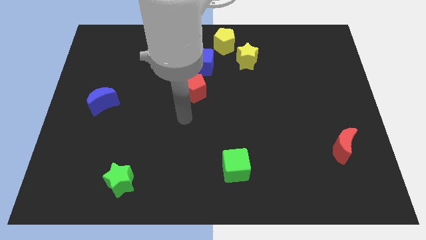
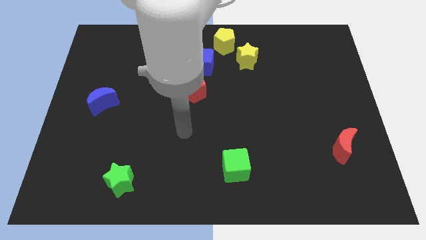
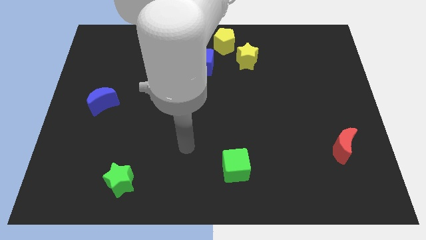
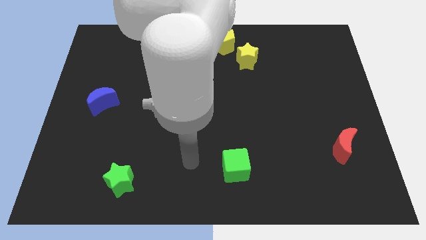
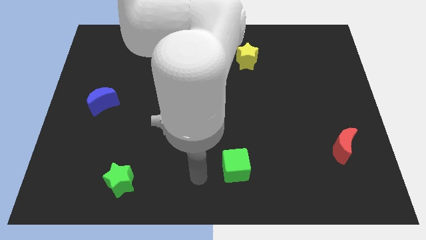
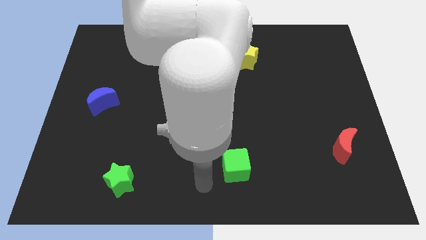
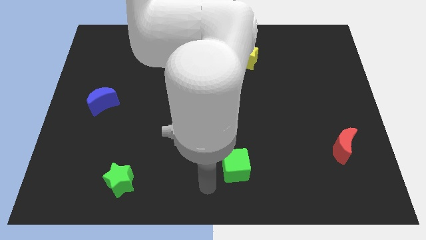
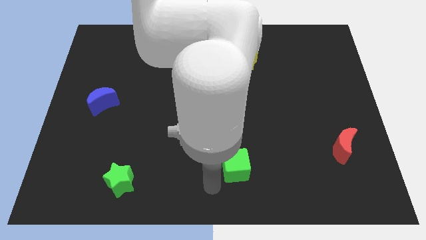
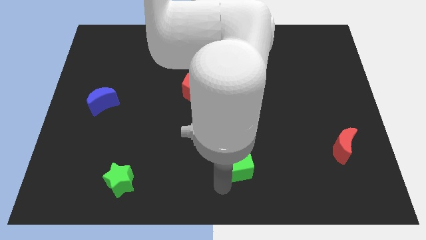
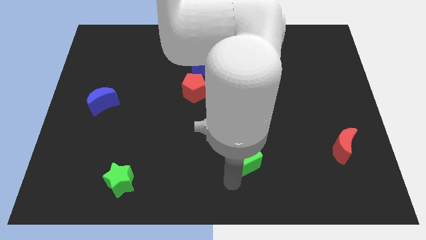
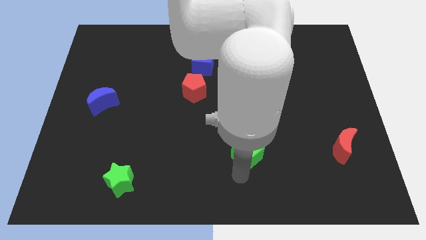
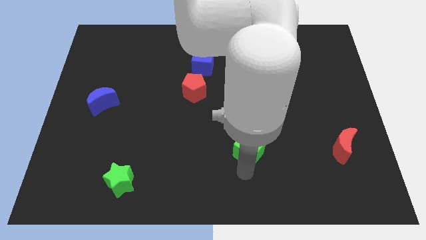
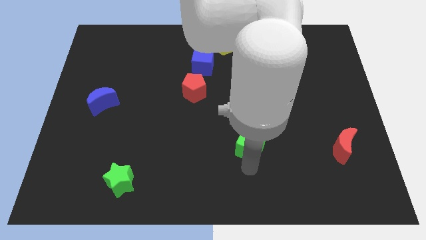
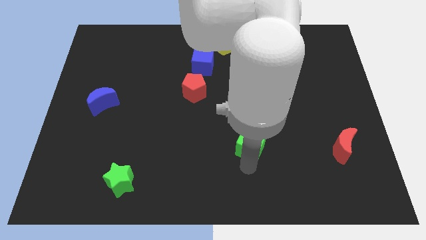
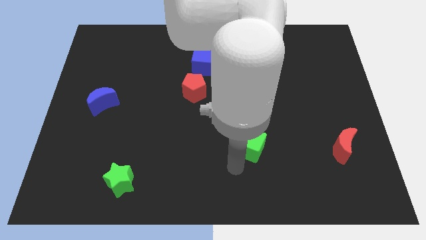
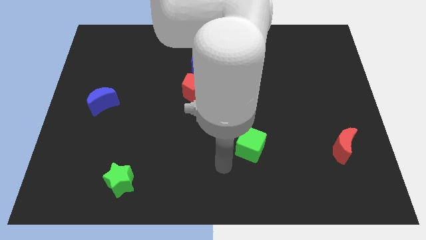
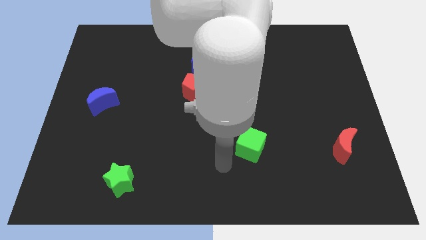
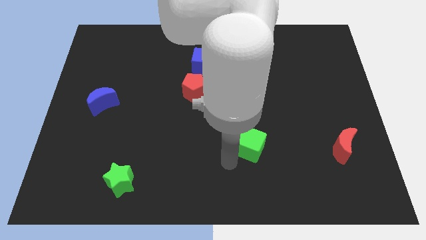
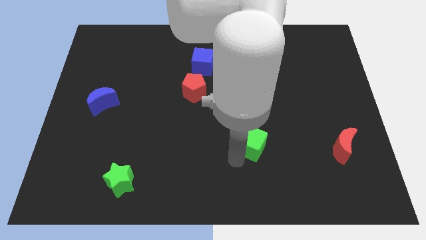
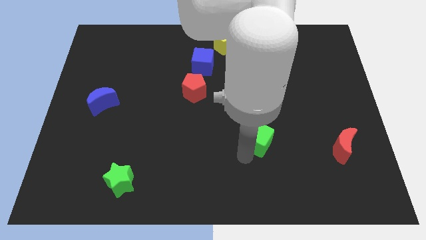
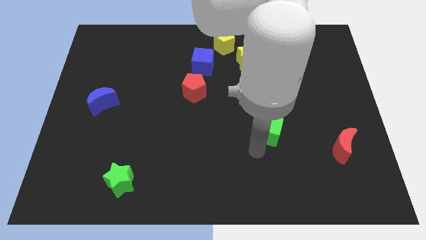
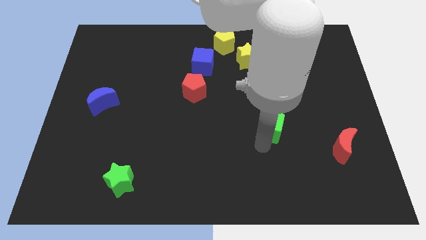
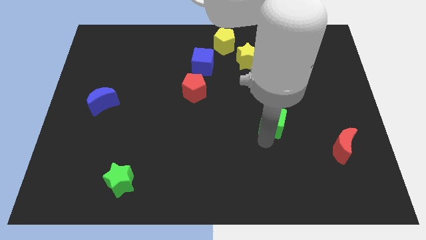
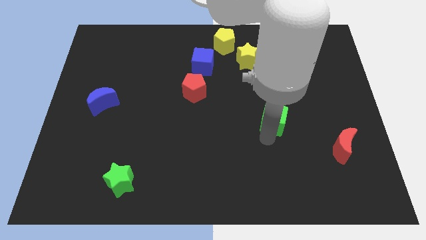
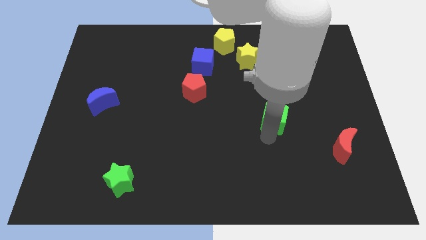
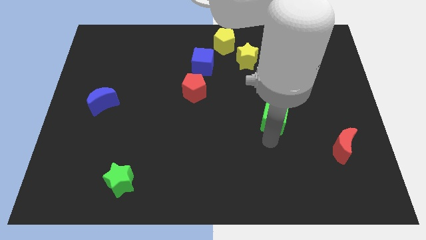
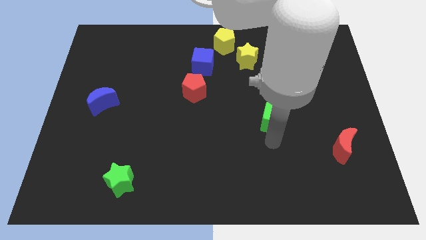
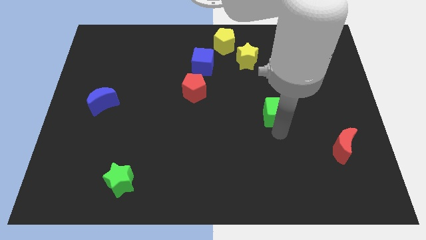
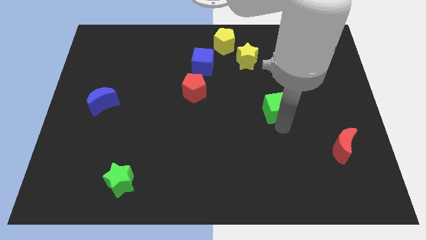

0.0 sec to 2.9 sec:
push green cube slightly upwards

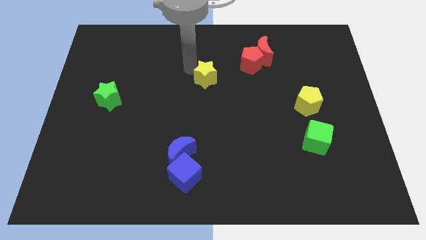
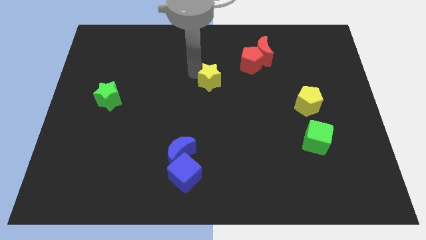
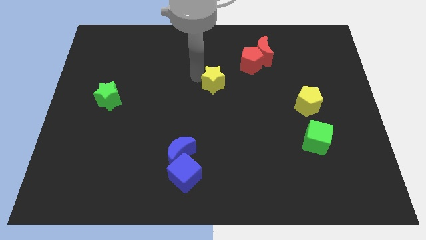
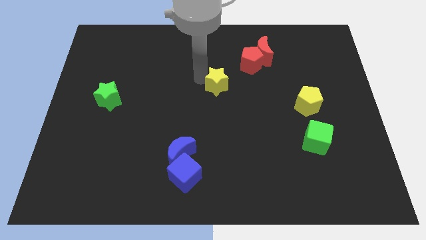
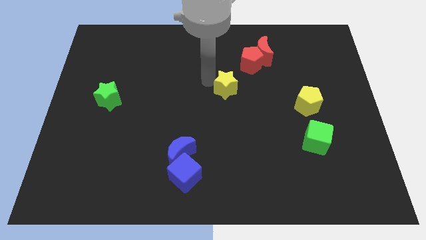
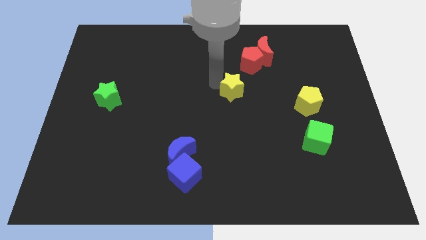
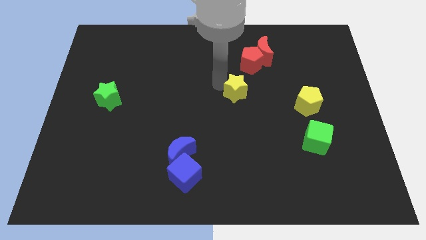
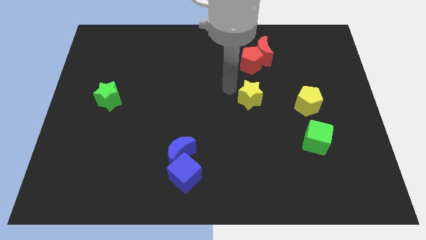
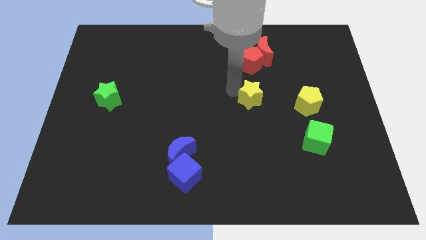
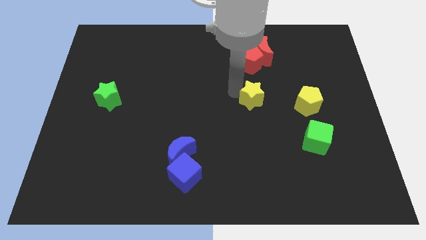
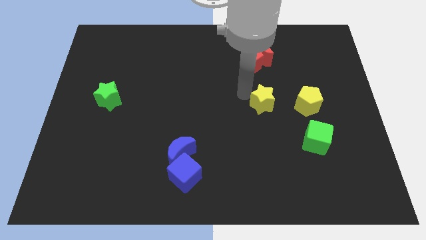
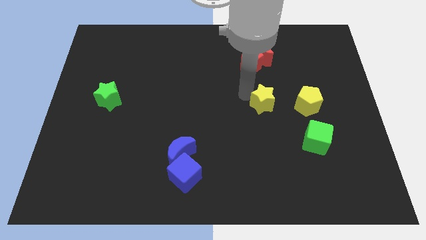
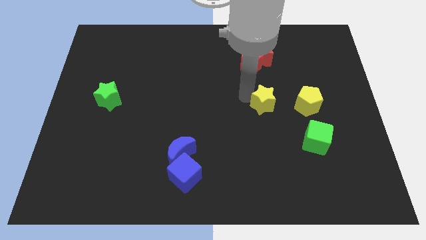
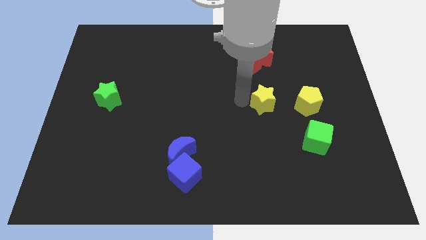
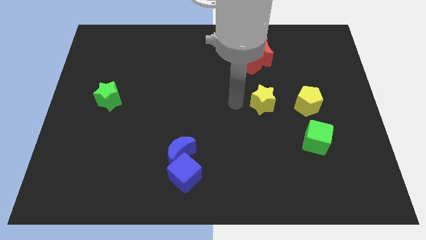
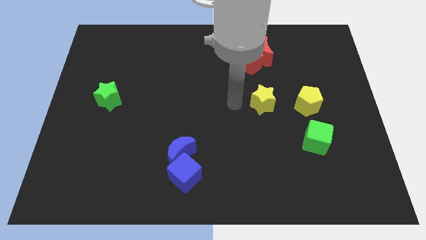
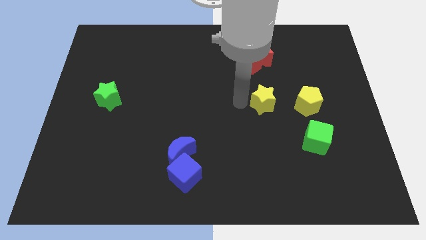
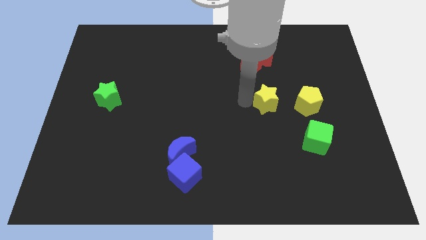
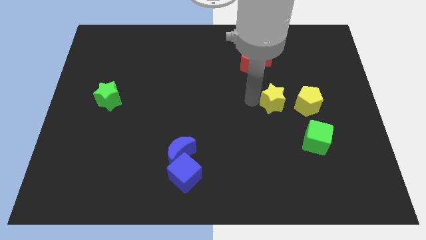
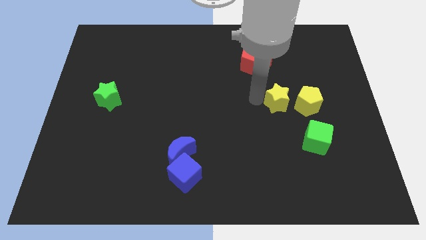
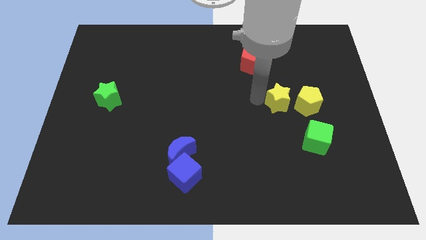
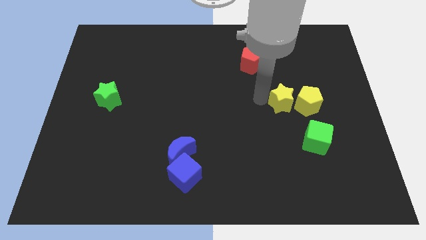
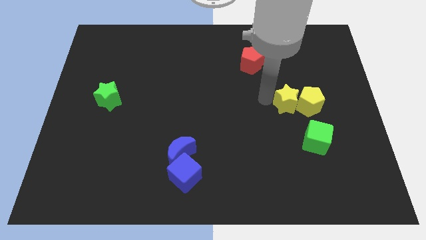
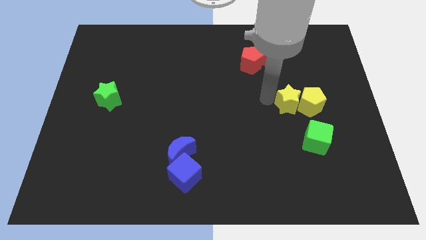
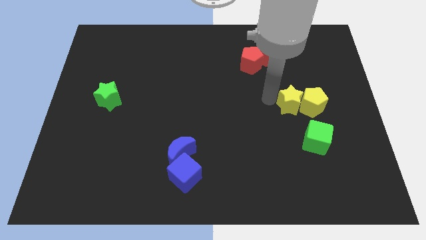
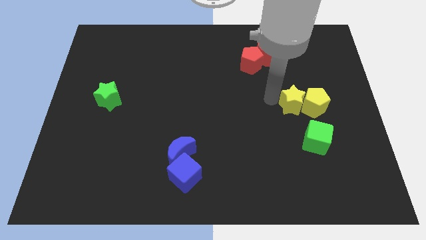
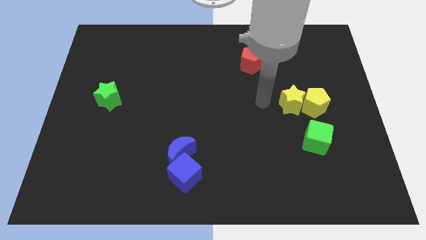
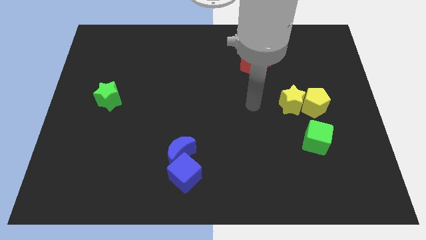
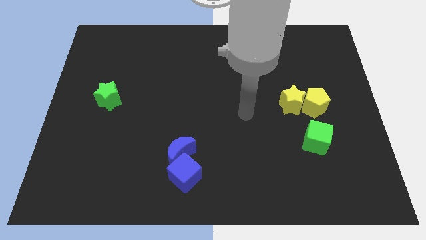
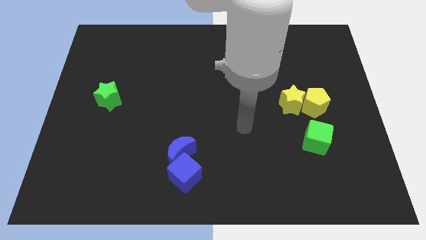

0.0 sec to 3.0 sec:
push yellow star to the left of yellow pentagon

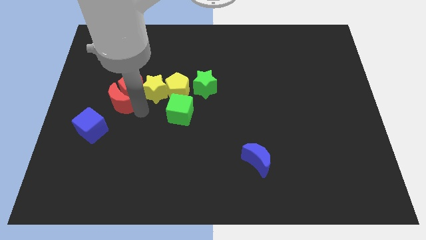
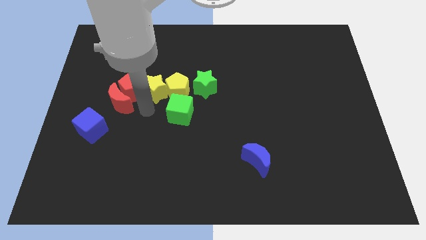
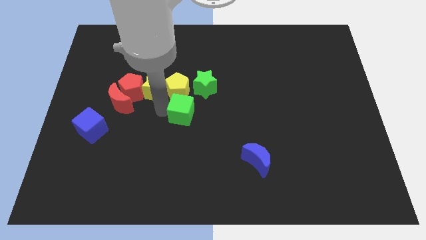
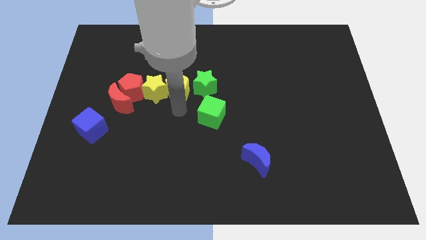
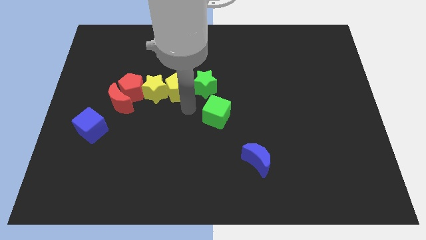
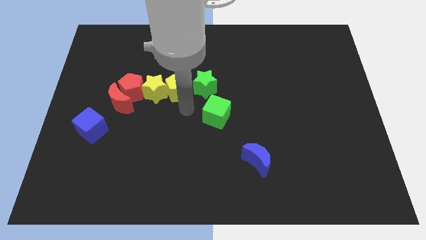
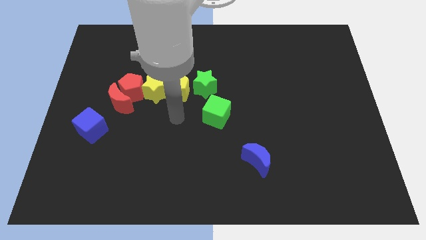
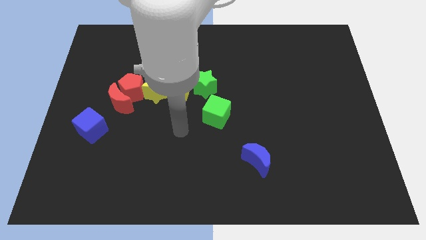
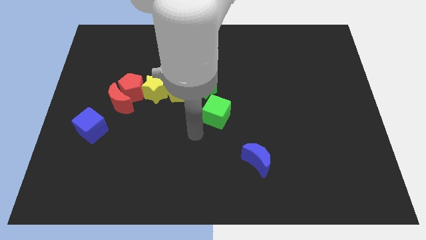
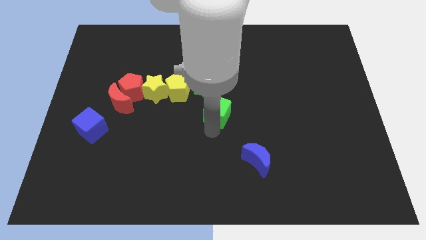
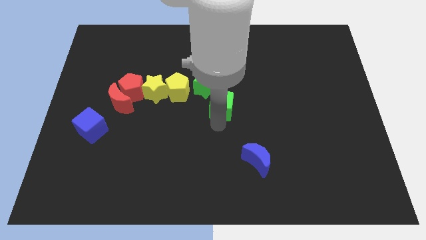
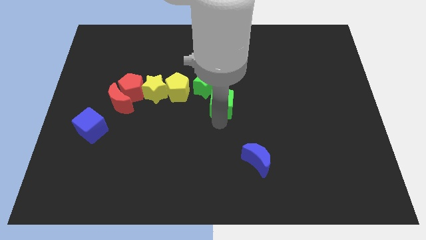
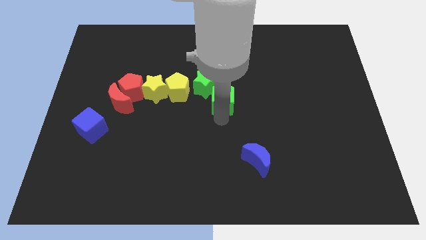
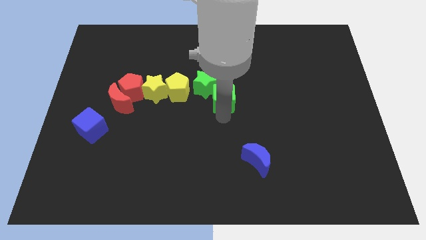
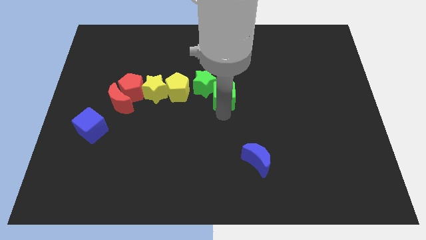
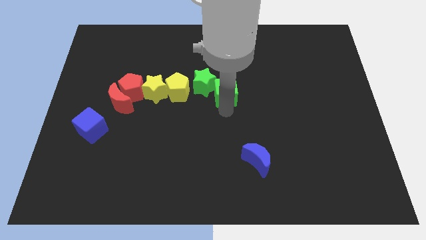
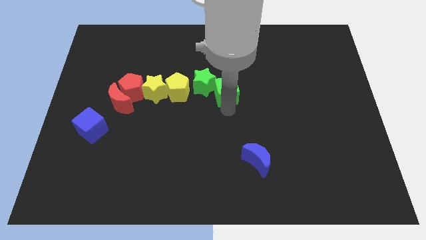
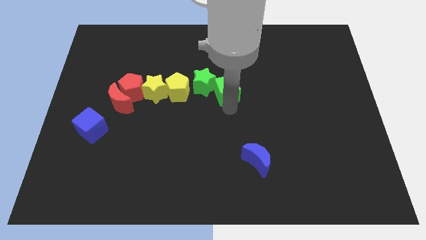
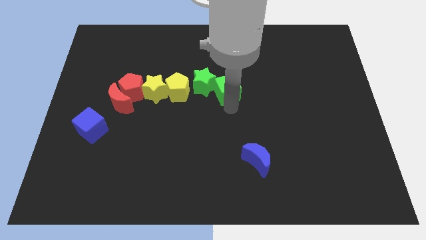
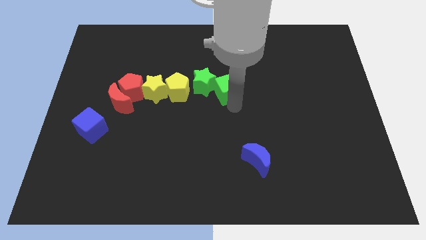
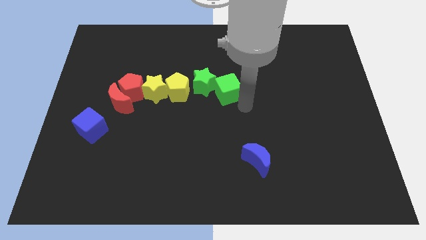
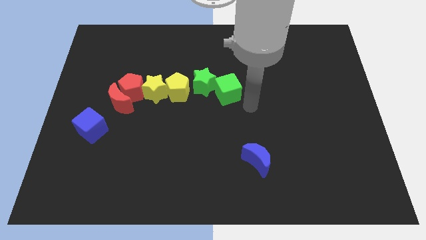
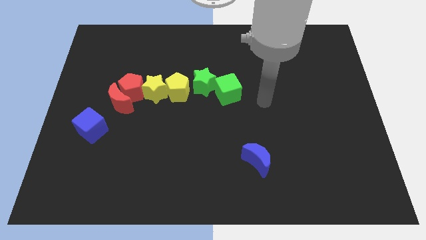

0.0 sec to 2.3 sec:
push the green cube to the right of the green star

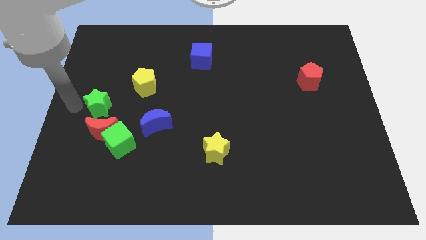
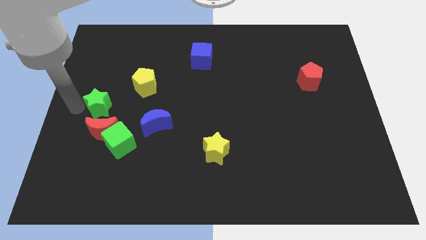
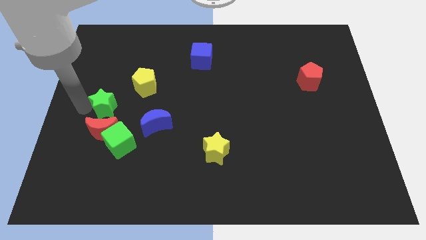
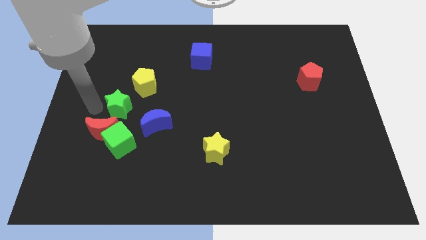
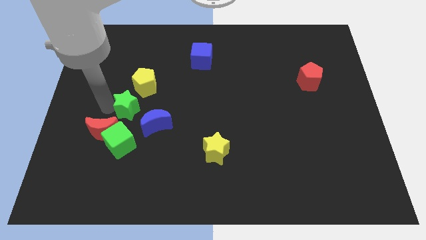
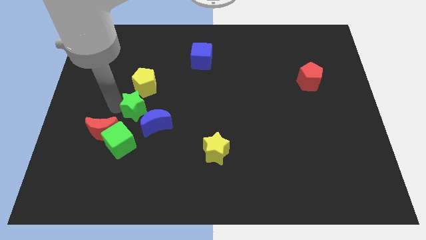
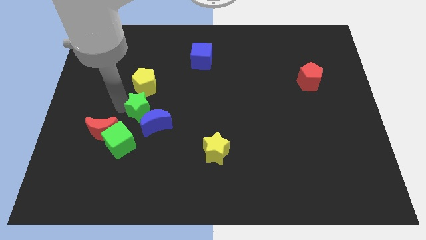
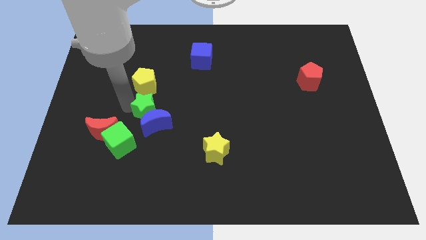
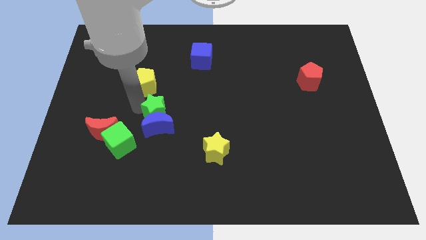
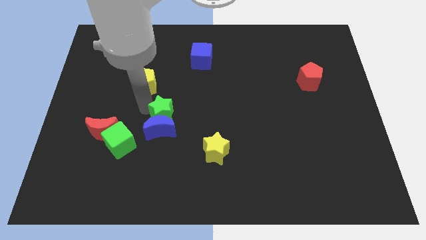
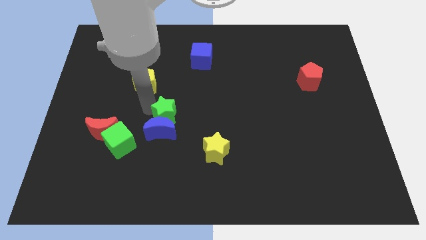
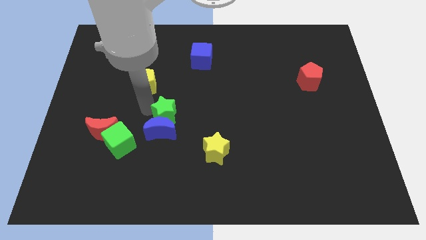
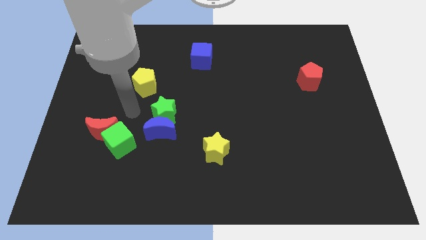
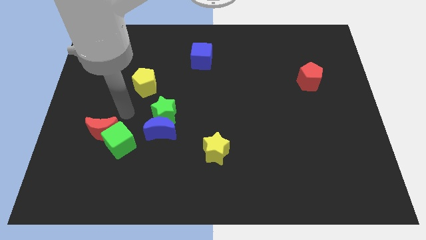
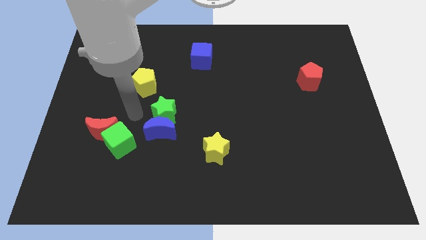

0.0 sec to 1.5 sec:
place the green star above the blue moon
